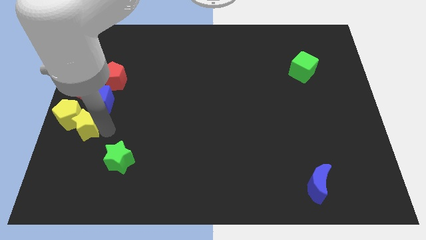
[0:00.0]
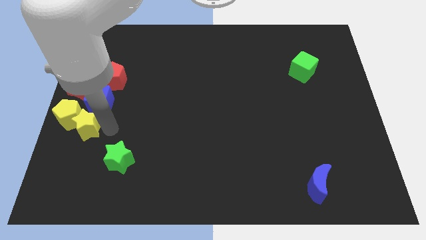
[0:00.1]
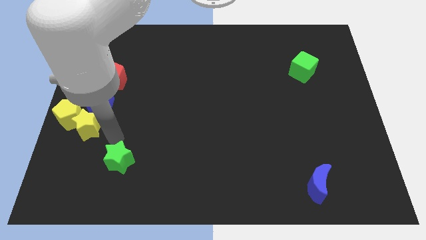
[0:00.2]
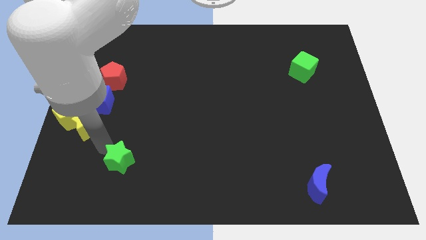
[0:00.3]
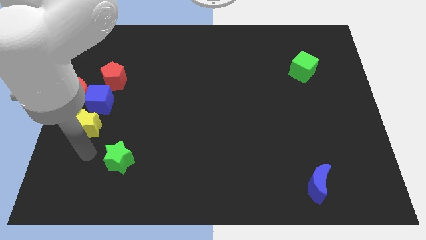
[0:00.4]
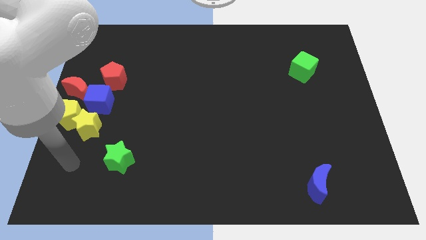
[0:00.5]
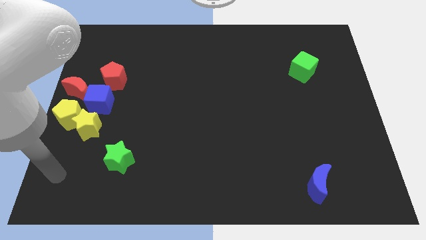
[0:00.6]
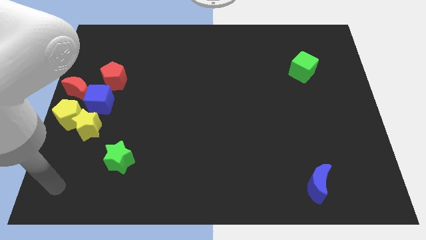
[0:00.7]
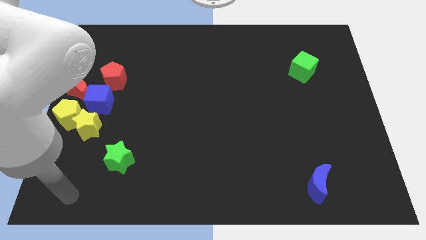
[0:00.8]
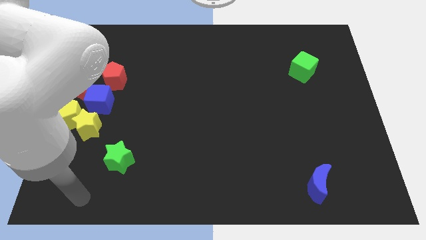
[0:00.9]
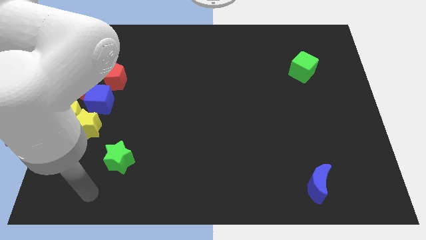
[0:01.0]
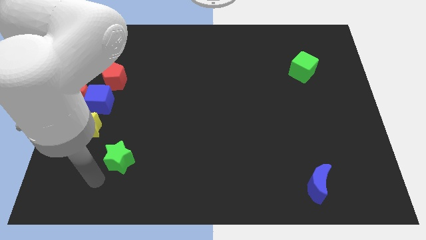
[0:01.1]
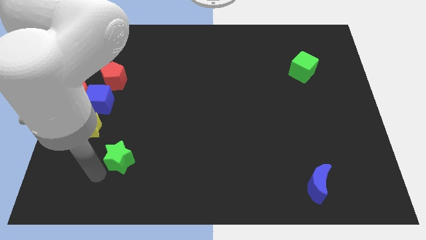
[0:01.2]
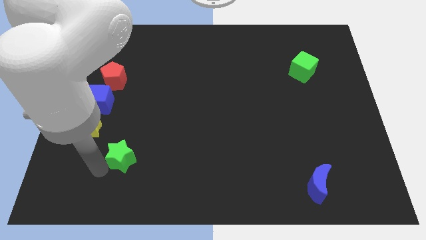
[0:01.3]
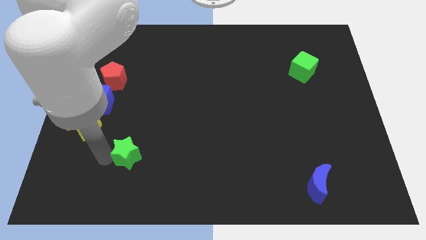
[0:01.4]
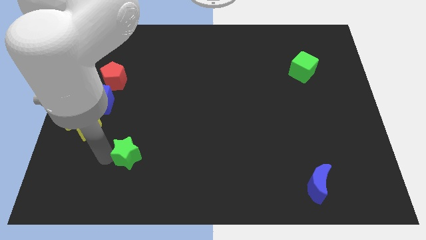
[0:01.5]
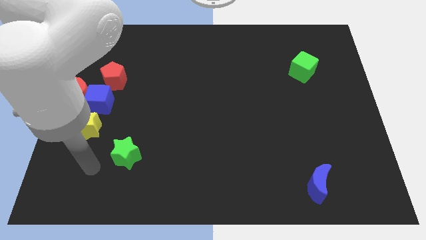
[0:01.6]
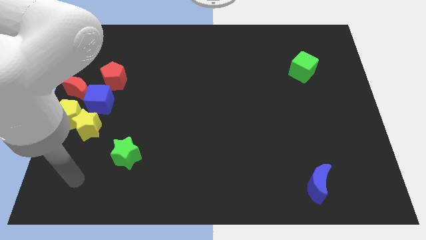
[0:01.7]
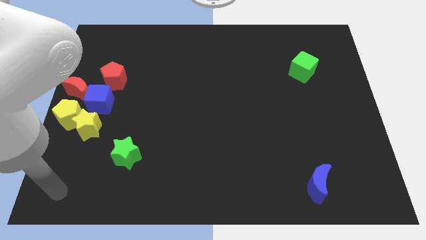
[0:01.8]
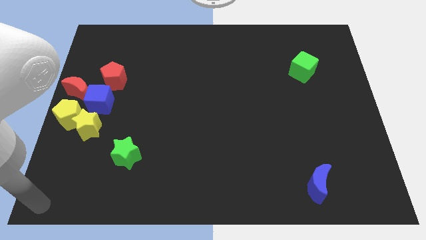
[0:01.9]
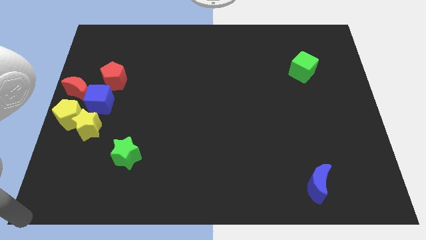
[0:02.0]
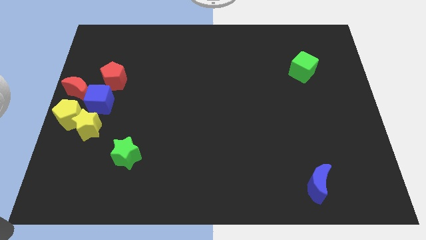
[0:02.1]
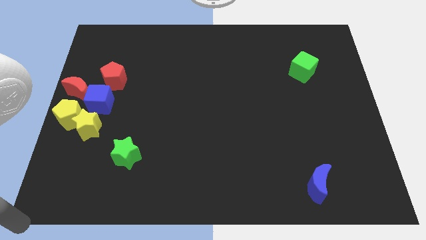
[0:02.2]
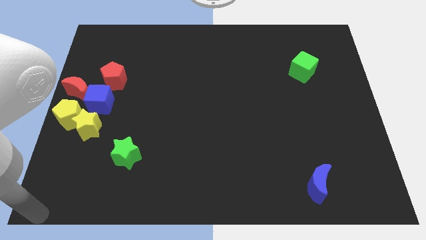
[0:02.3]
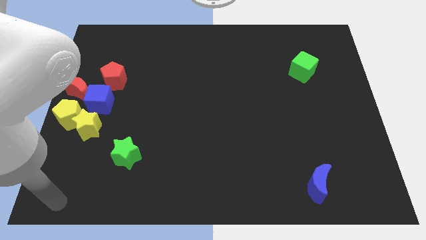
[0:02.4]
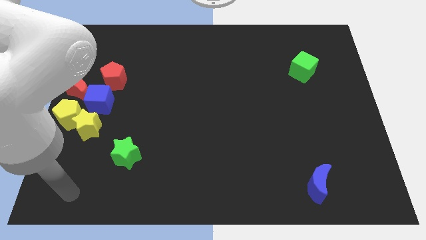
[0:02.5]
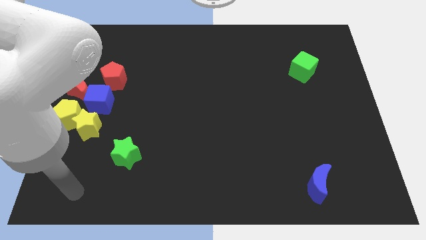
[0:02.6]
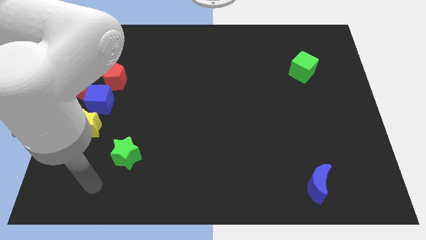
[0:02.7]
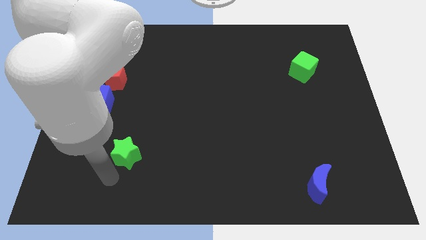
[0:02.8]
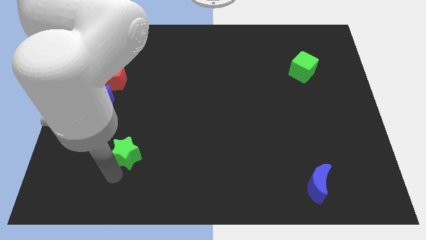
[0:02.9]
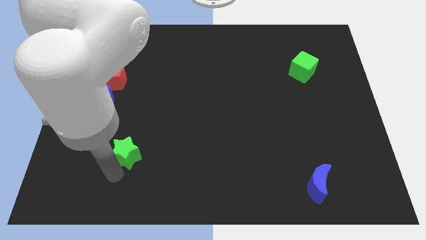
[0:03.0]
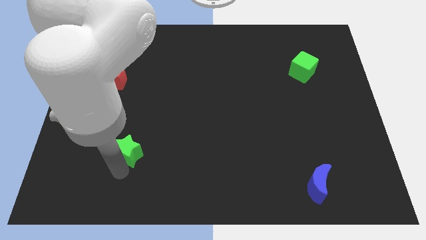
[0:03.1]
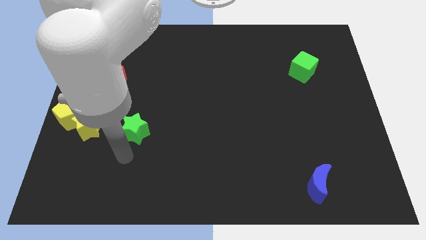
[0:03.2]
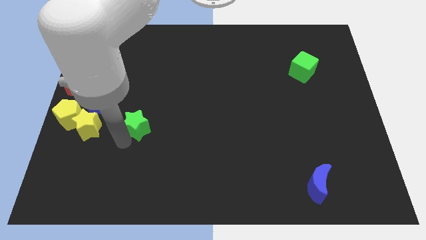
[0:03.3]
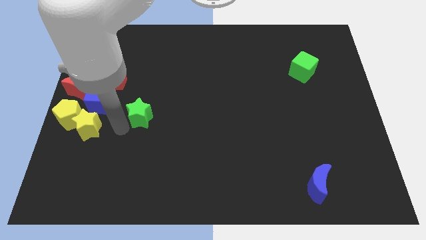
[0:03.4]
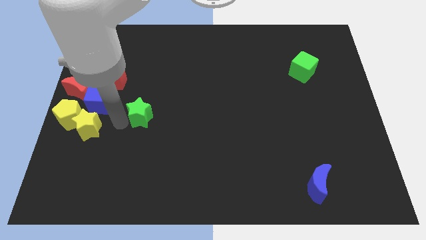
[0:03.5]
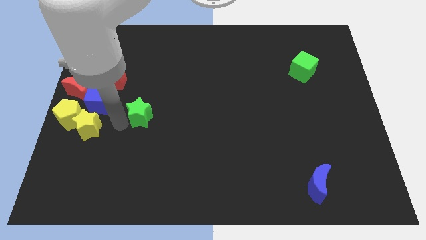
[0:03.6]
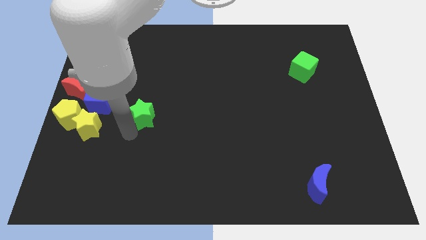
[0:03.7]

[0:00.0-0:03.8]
push the green star upwards

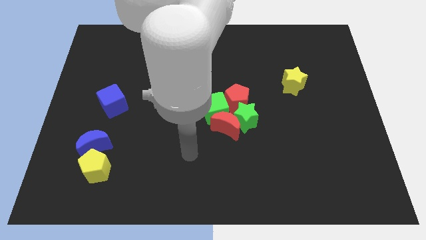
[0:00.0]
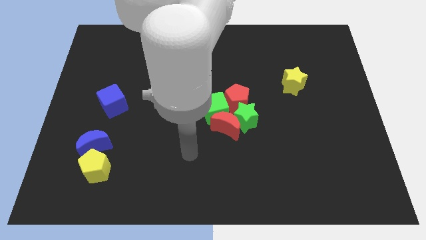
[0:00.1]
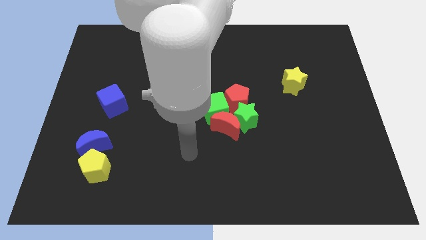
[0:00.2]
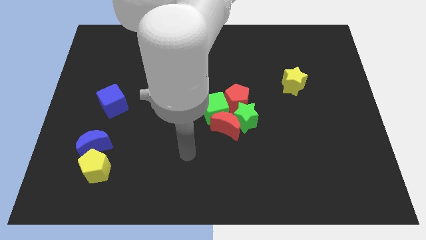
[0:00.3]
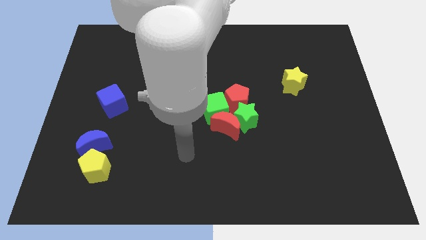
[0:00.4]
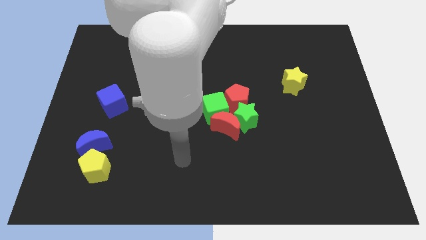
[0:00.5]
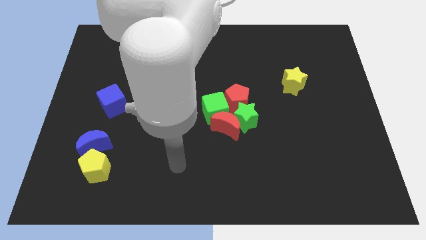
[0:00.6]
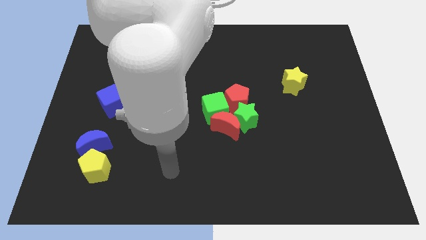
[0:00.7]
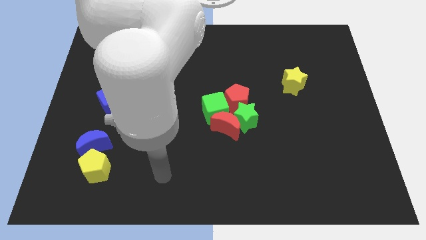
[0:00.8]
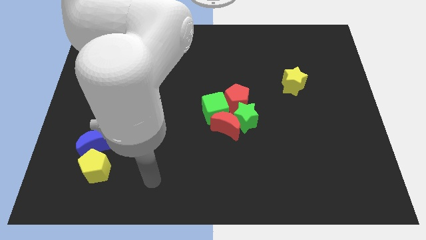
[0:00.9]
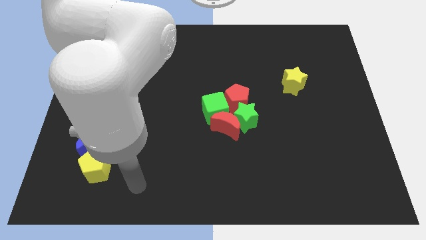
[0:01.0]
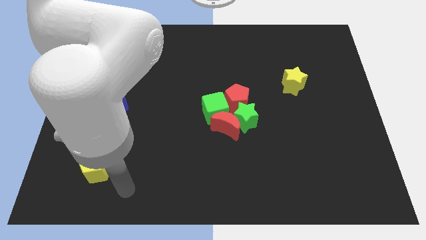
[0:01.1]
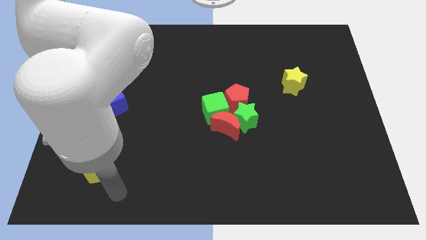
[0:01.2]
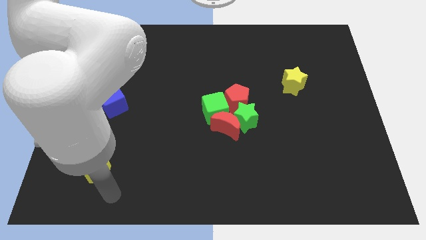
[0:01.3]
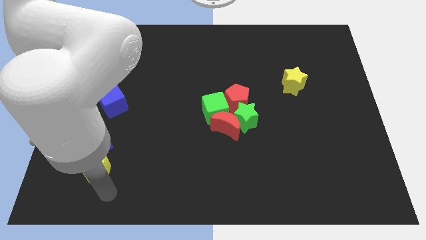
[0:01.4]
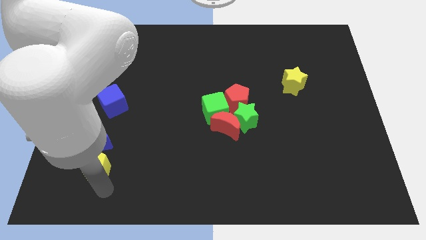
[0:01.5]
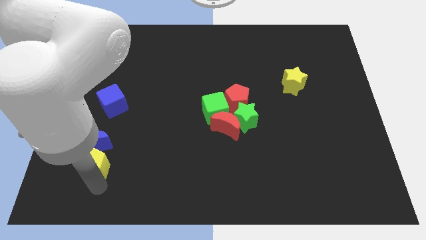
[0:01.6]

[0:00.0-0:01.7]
place the arm below the yellow pentagon

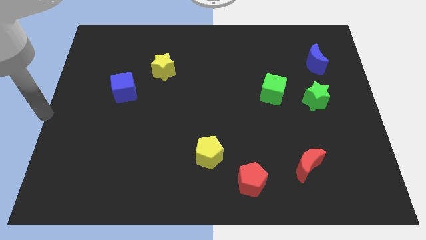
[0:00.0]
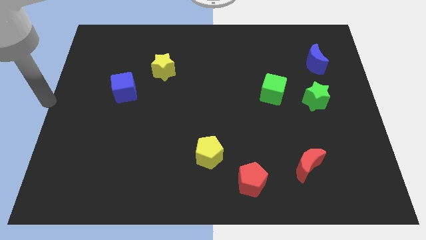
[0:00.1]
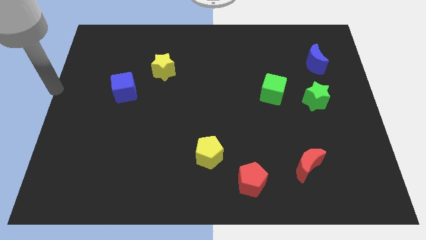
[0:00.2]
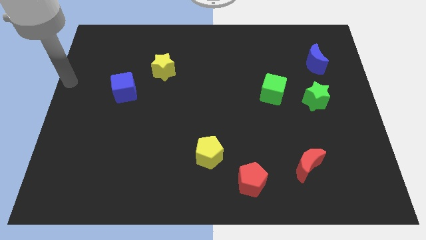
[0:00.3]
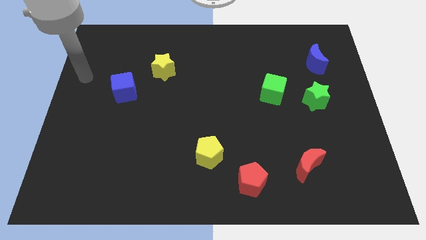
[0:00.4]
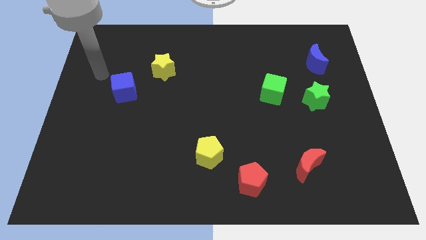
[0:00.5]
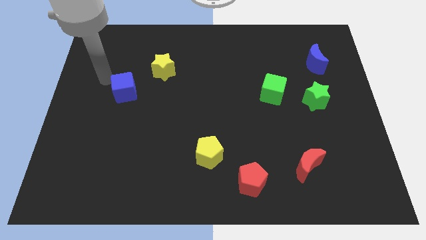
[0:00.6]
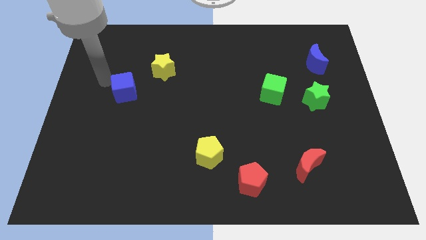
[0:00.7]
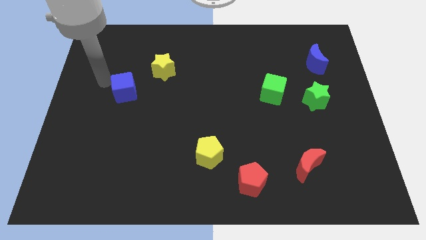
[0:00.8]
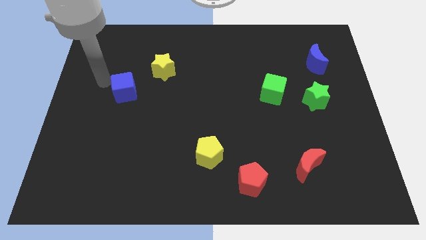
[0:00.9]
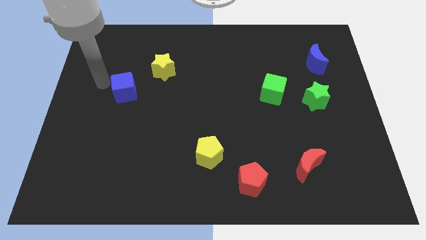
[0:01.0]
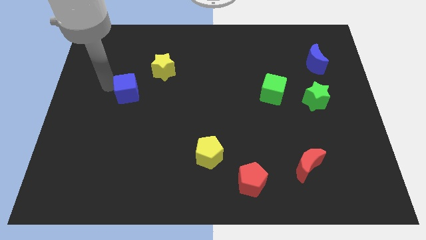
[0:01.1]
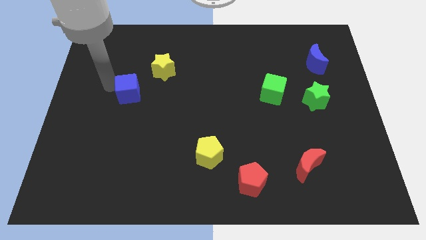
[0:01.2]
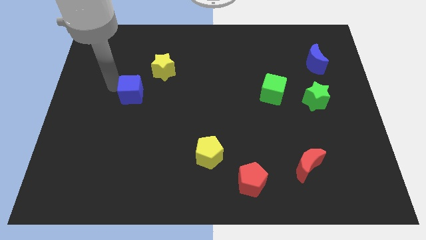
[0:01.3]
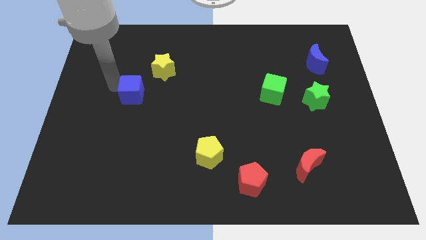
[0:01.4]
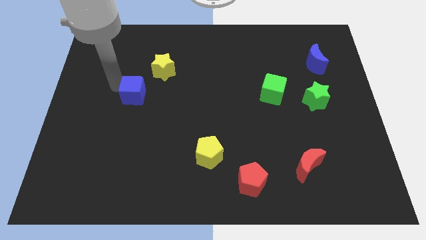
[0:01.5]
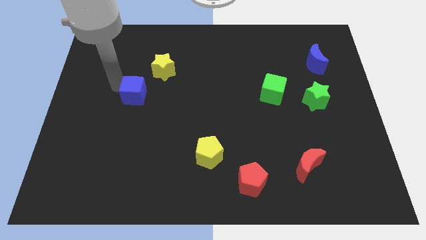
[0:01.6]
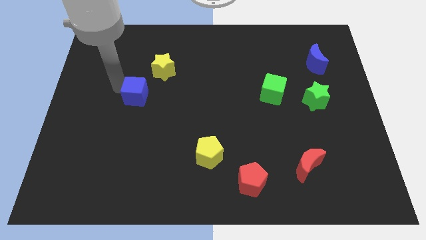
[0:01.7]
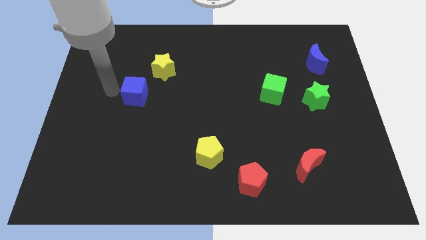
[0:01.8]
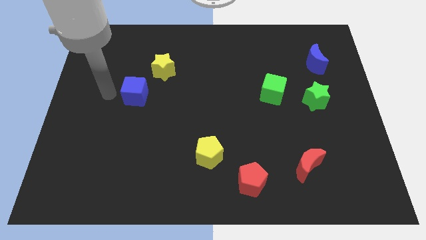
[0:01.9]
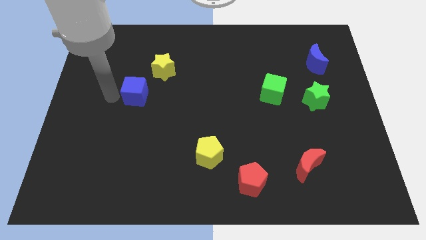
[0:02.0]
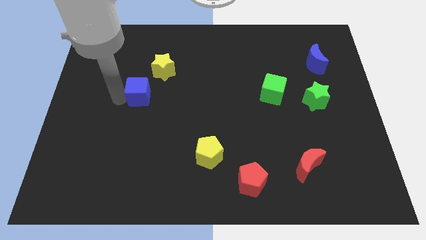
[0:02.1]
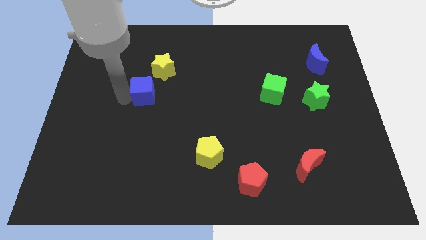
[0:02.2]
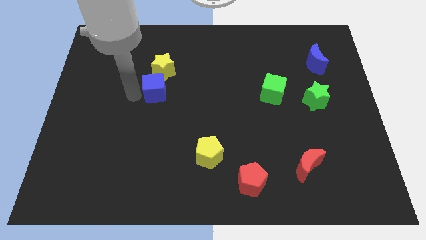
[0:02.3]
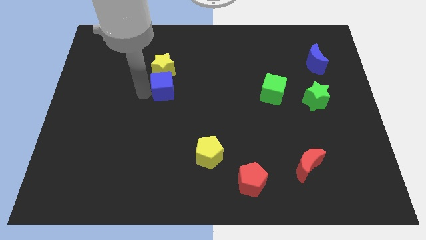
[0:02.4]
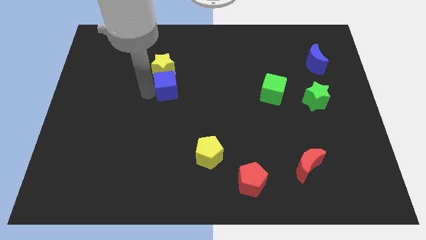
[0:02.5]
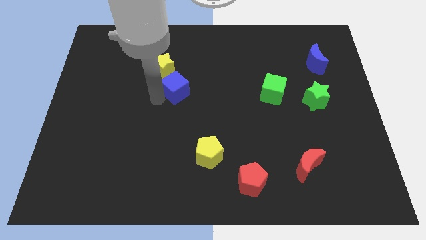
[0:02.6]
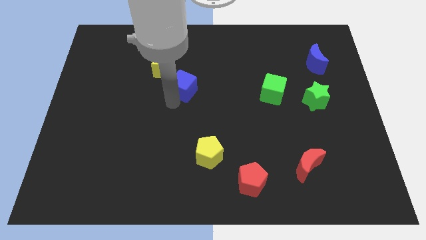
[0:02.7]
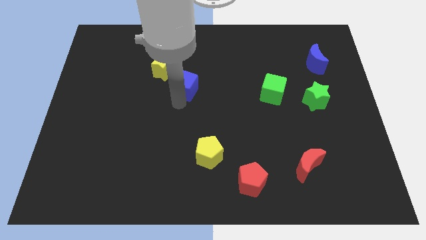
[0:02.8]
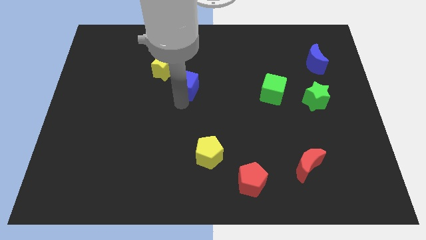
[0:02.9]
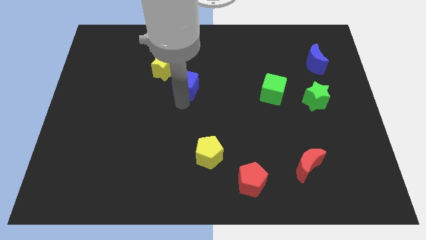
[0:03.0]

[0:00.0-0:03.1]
slide blue cube to the bottom right of yellow star

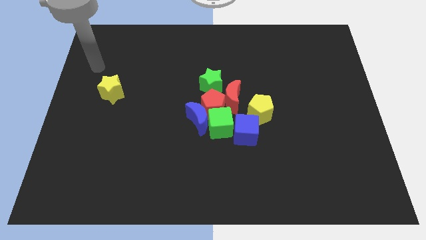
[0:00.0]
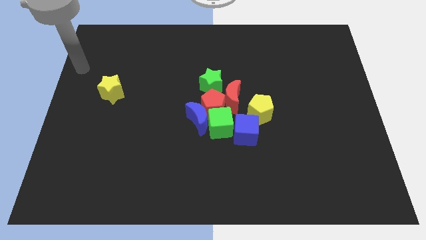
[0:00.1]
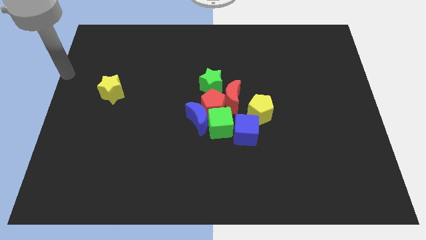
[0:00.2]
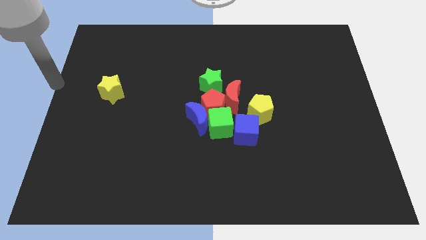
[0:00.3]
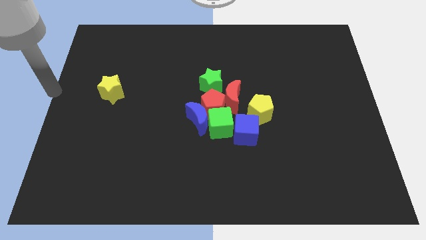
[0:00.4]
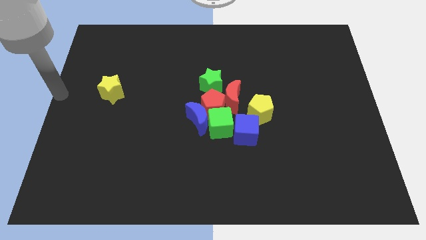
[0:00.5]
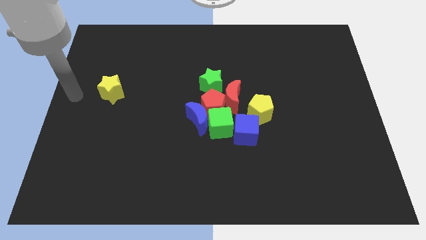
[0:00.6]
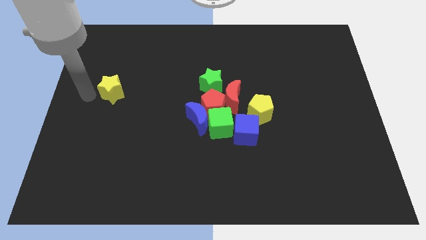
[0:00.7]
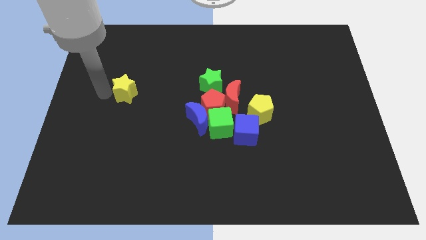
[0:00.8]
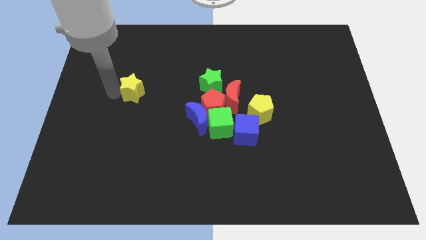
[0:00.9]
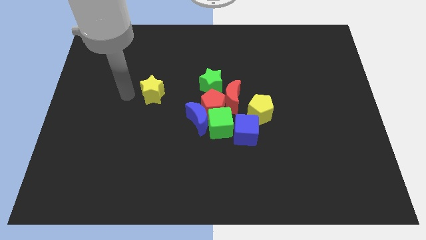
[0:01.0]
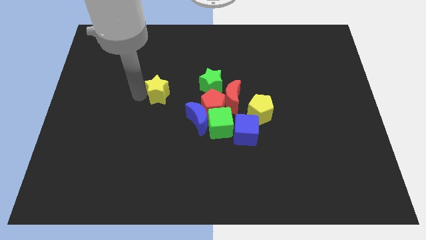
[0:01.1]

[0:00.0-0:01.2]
push the yellow star slightly to the right
